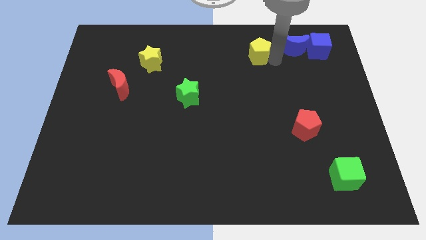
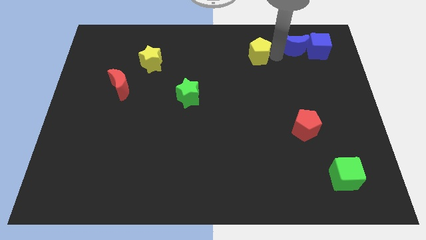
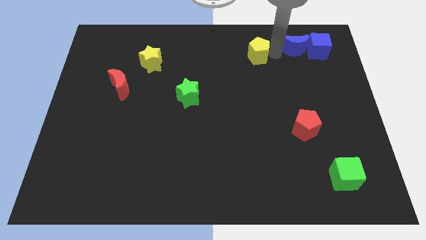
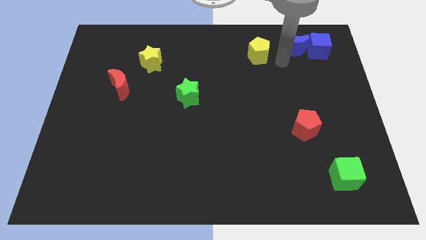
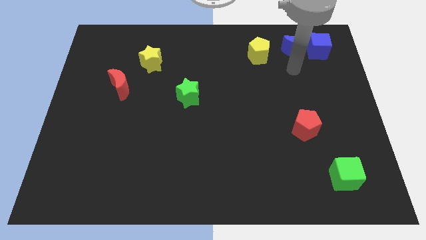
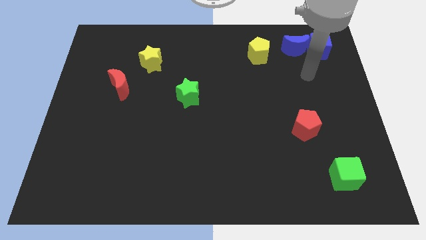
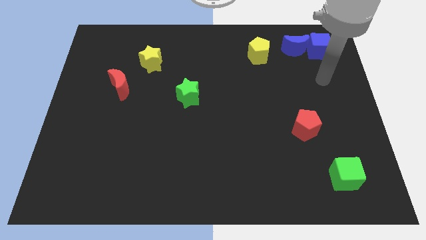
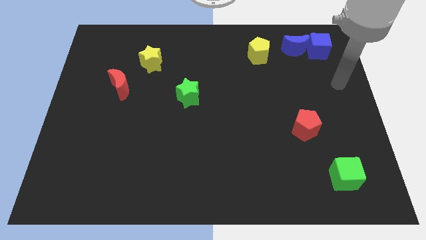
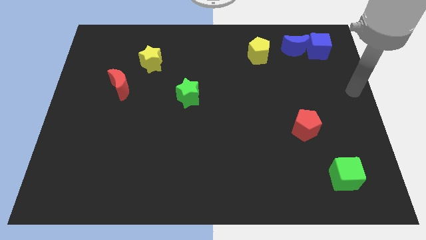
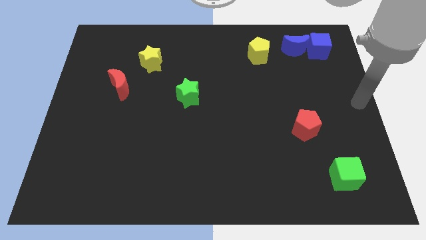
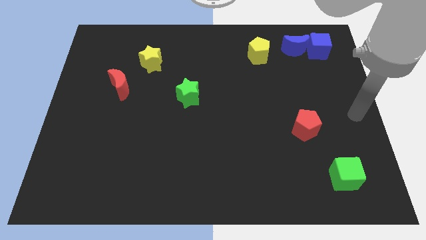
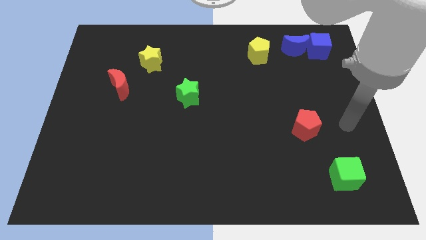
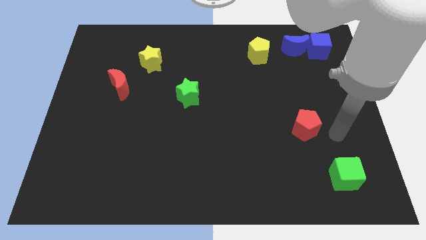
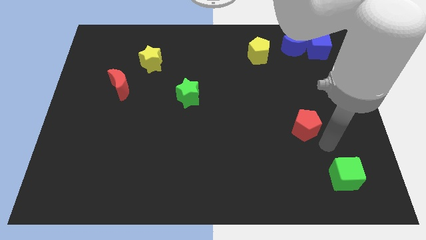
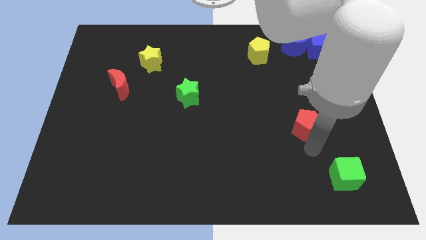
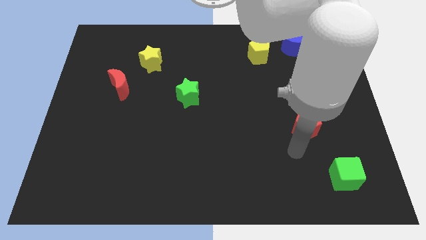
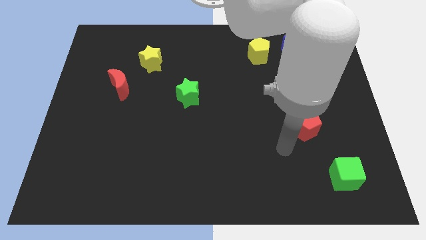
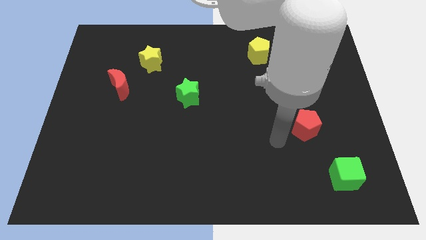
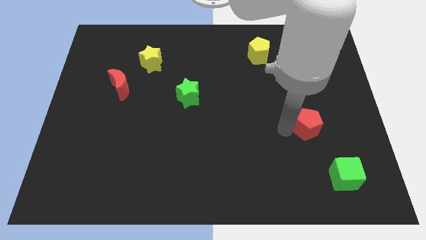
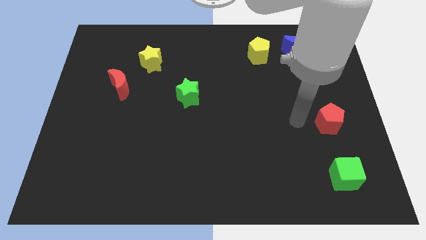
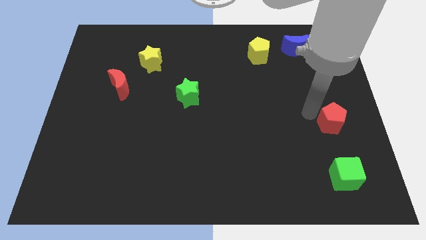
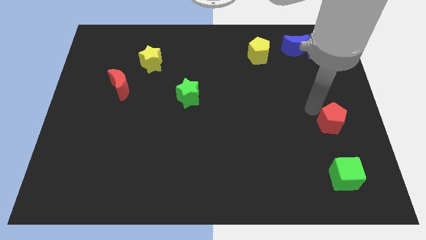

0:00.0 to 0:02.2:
place the red pentagon above the green cube

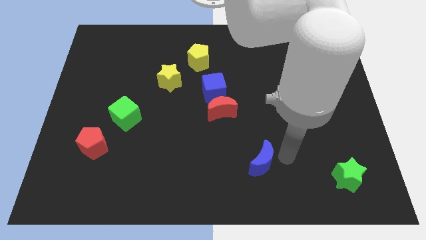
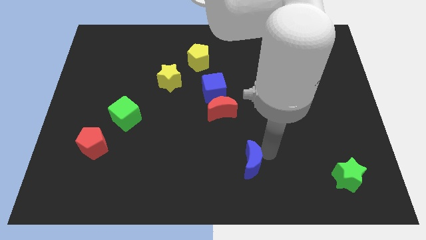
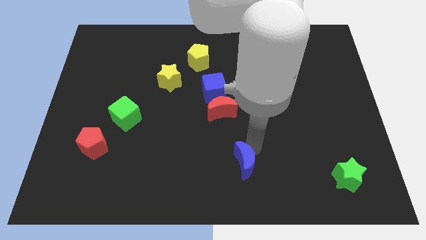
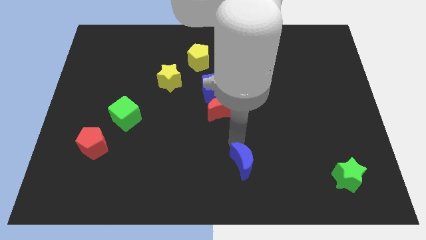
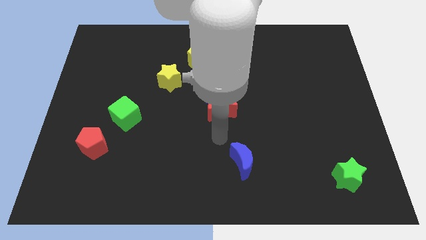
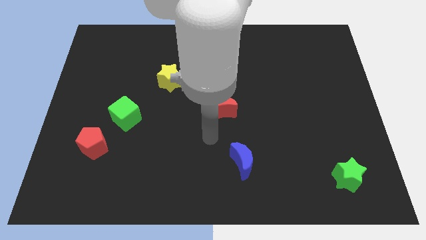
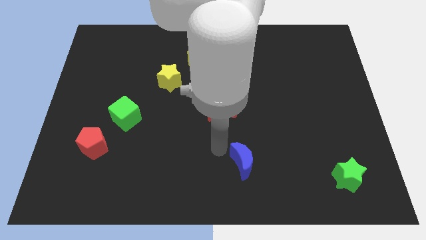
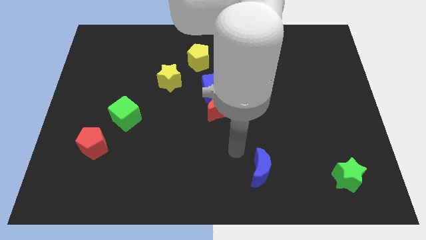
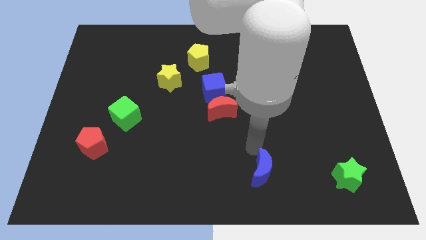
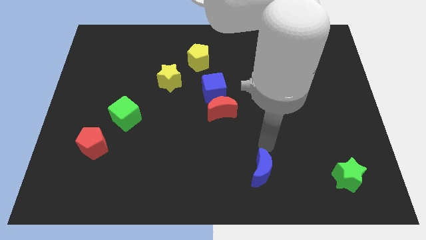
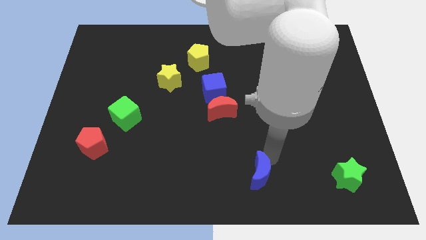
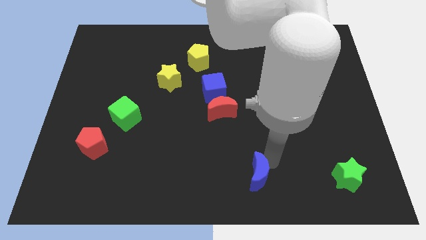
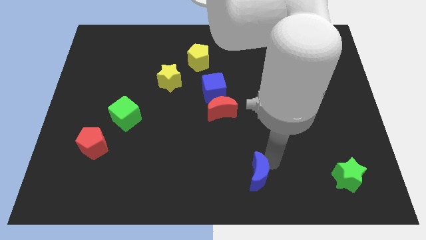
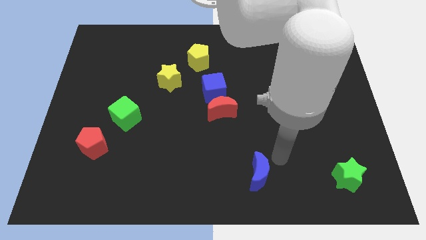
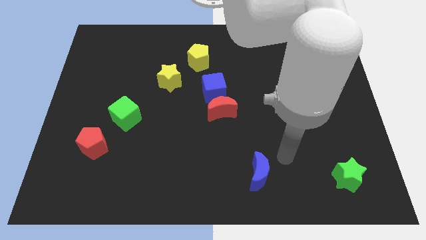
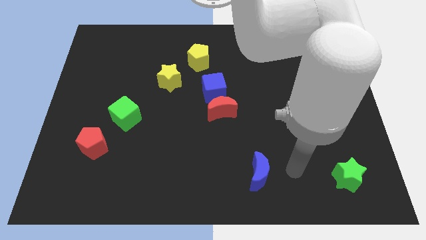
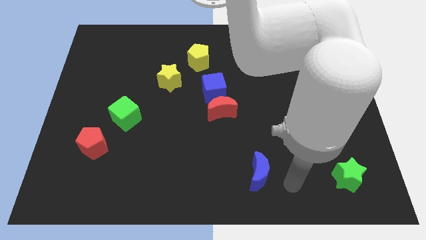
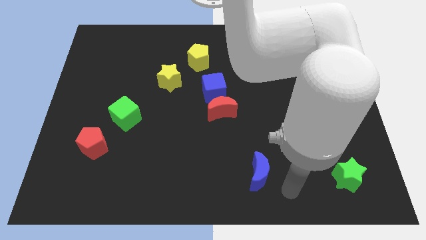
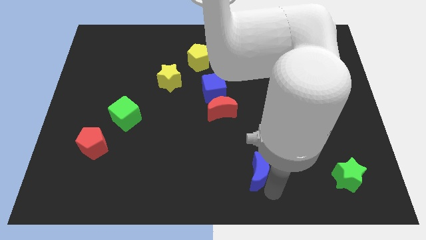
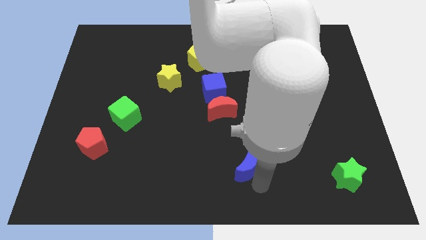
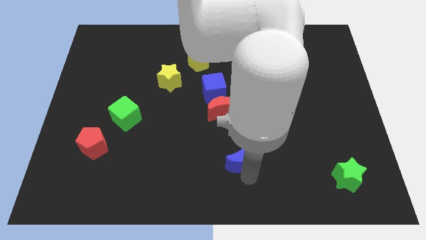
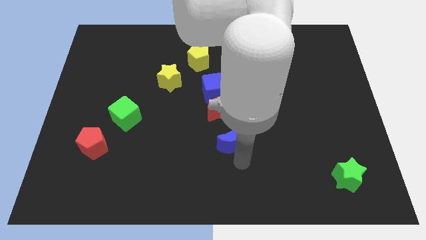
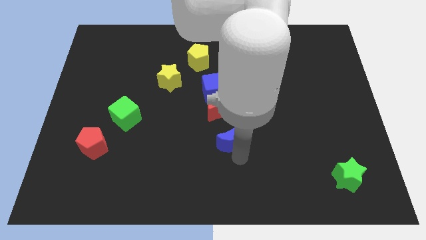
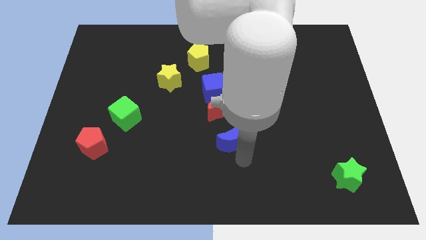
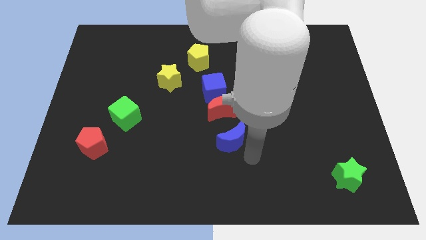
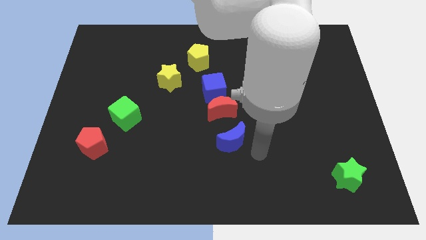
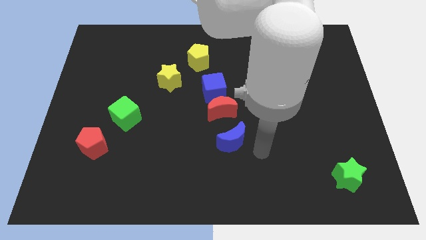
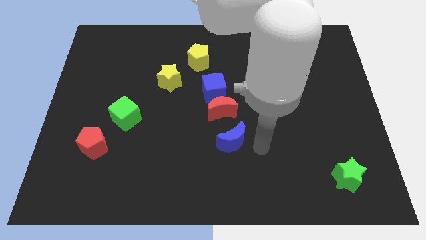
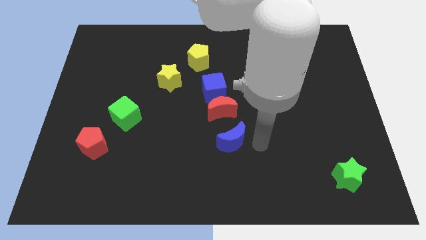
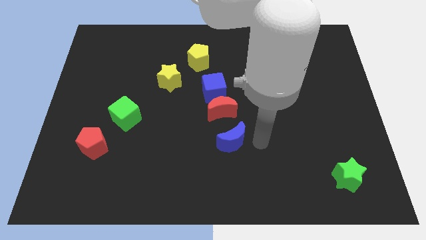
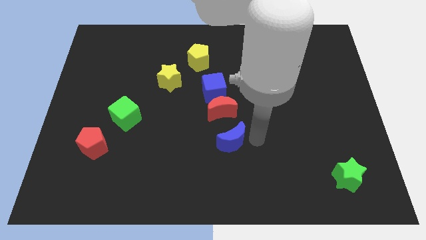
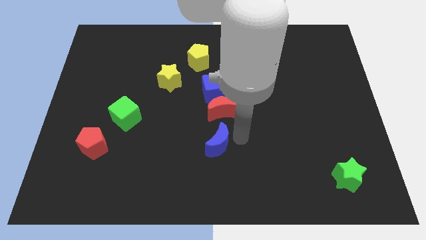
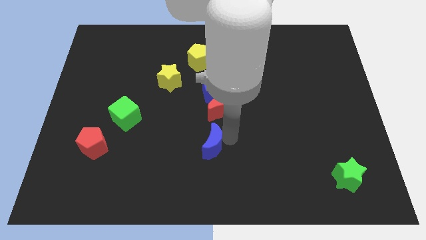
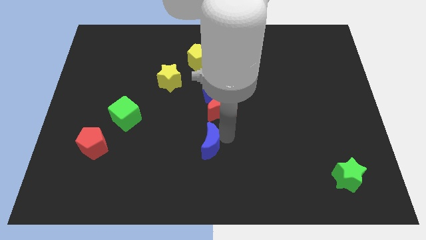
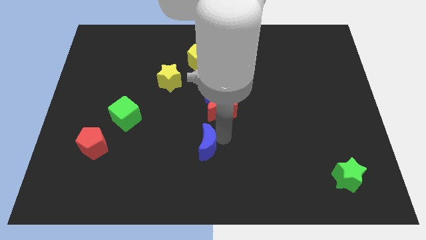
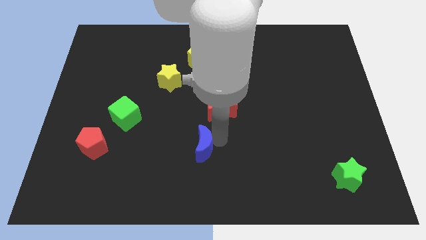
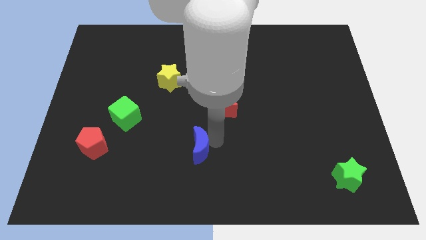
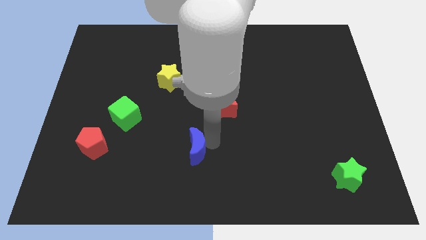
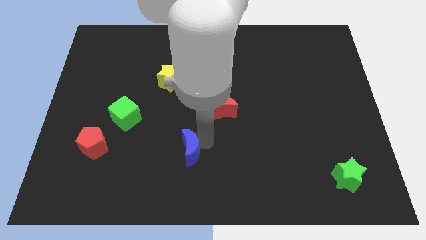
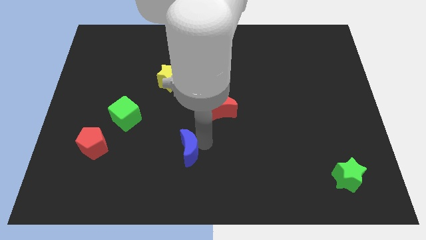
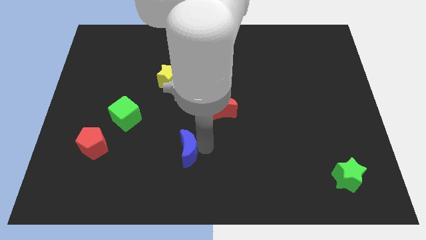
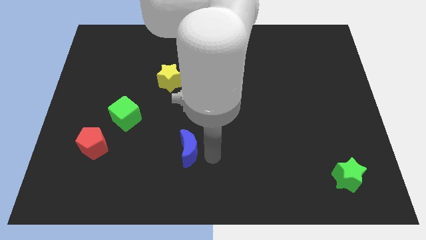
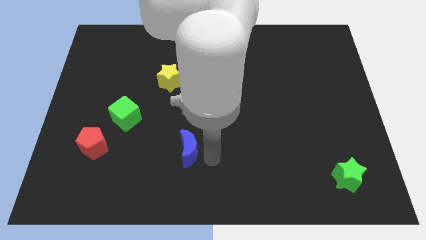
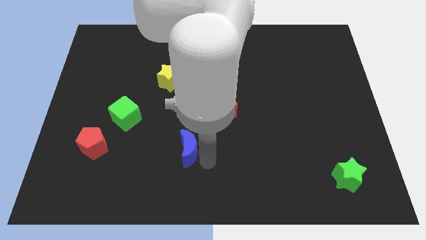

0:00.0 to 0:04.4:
push the blue moon towards the red pentagon

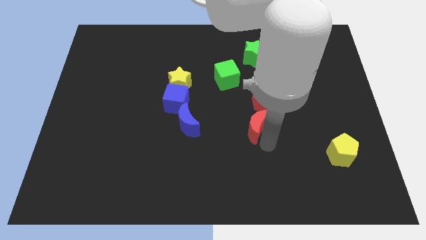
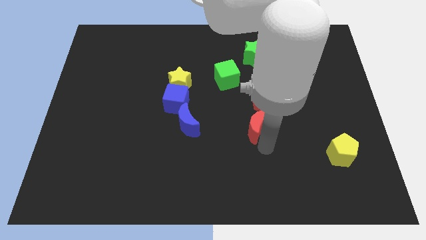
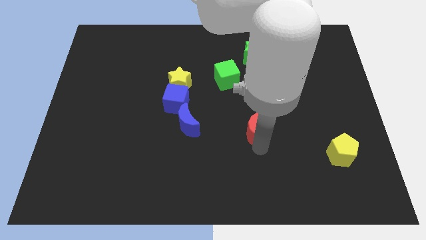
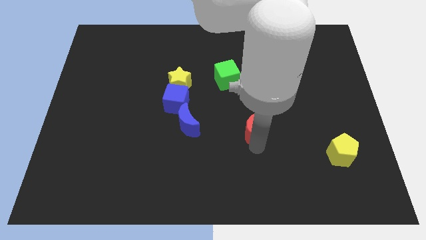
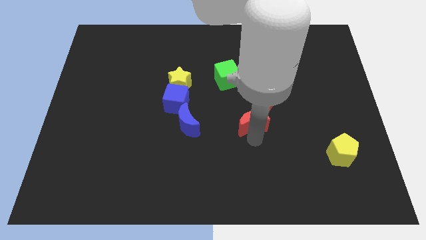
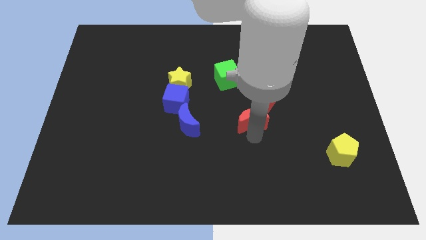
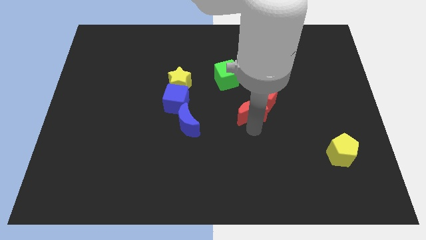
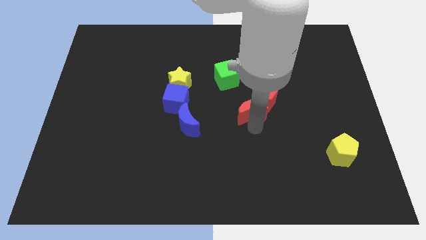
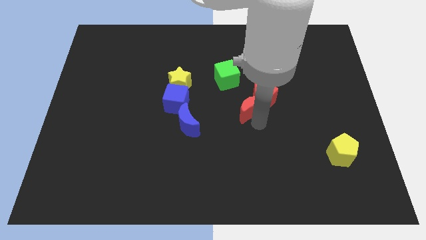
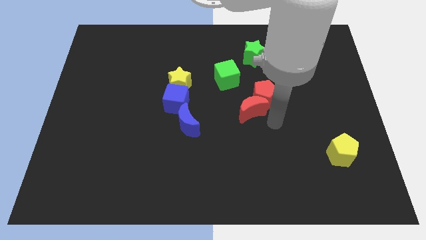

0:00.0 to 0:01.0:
move the red crescent into the red pentagon

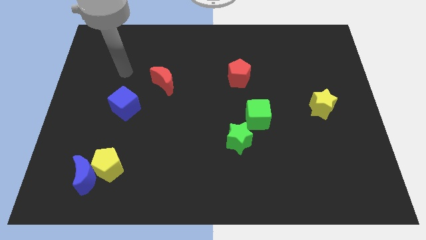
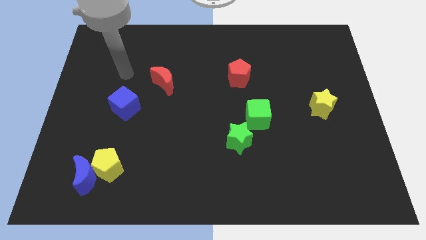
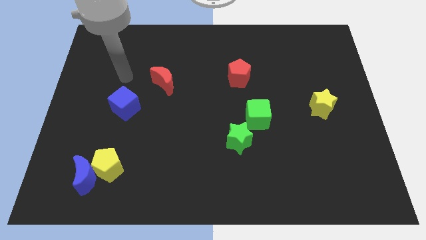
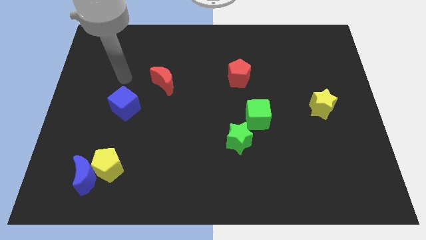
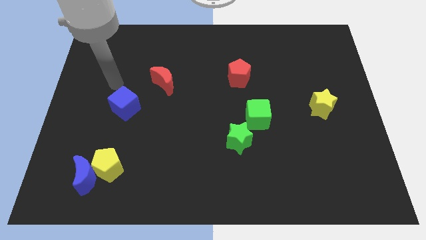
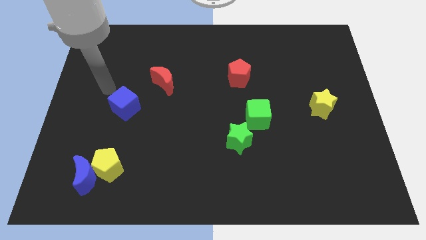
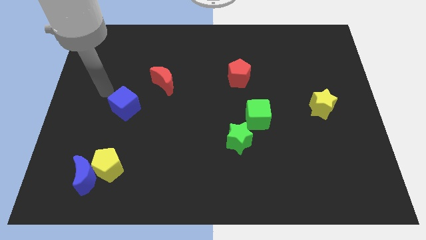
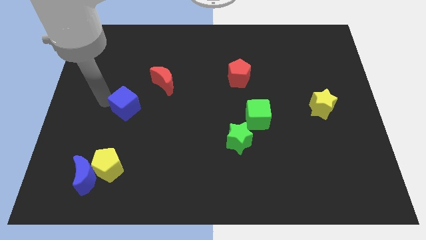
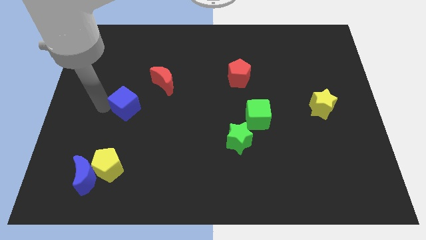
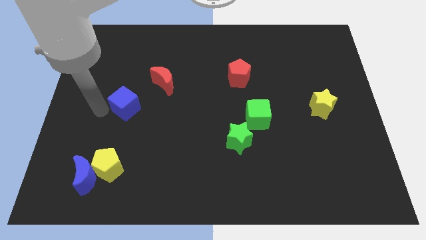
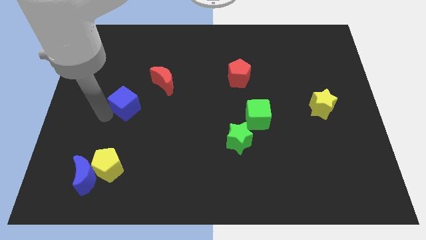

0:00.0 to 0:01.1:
push your arm to the left of blue cube

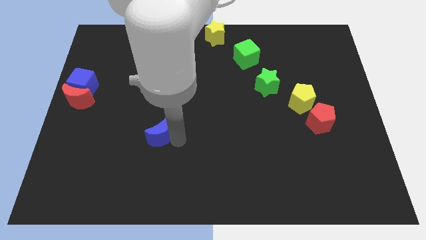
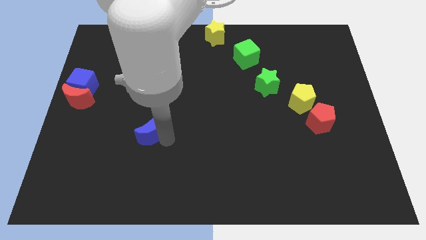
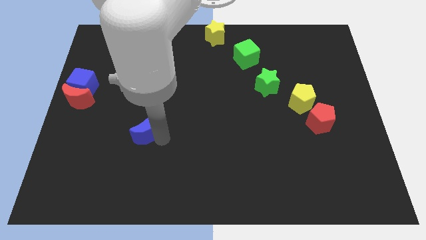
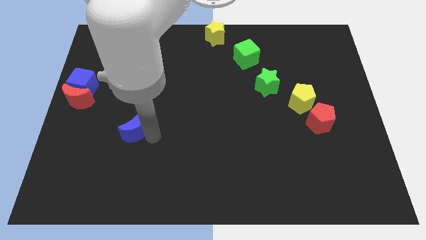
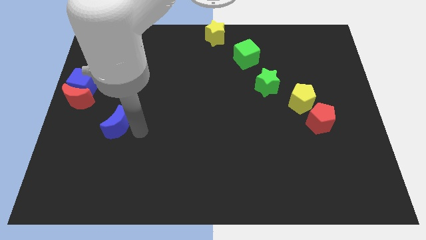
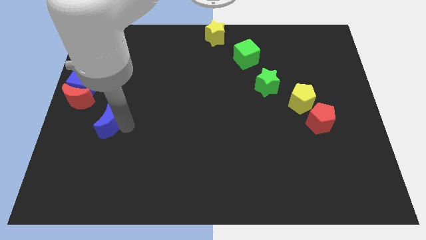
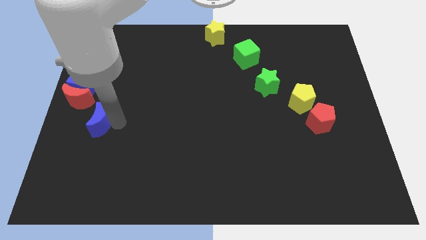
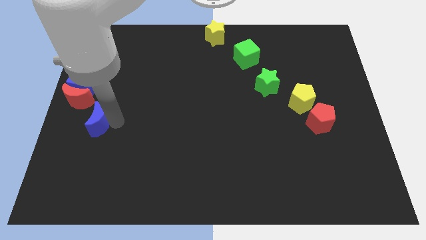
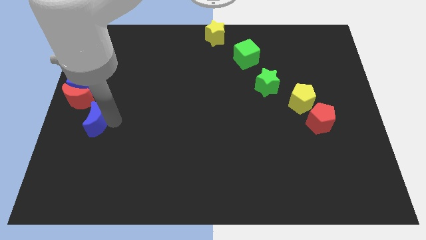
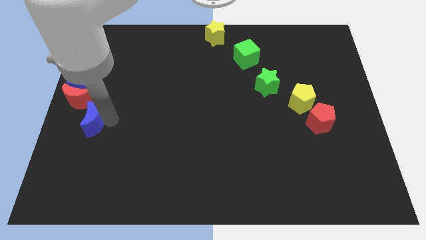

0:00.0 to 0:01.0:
move the blue moon to the right bottom of the red moon
